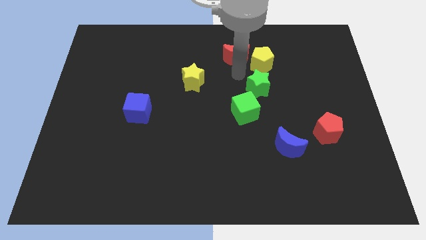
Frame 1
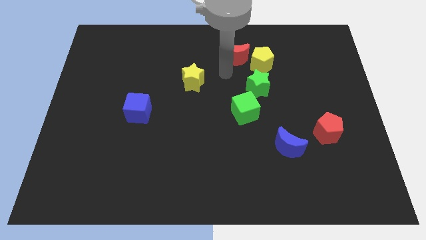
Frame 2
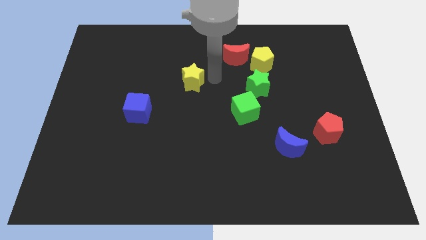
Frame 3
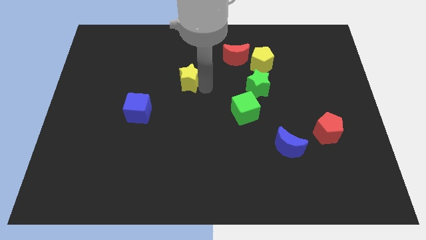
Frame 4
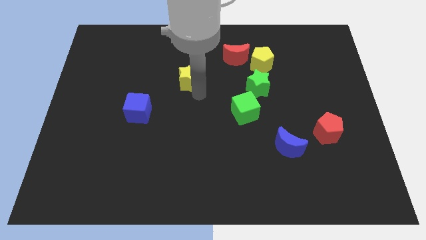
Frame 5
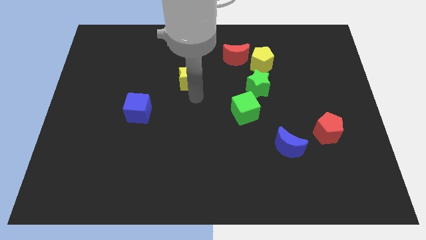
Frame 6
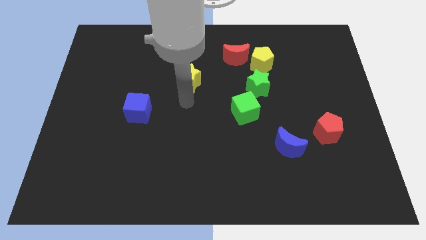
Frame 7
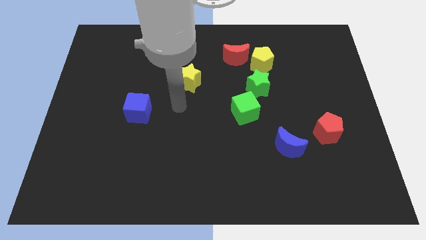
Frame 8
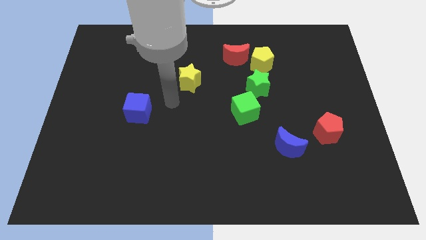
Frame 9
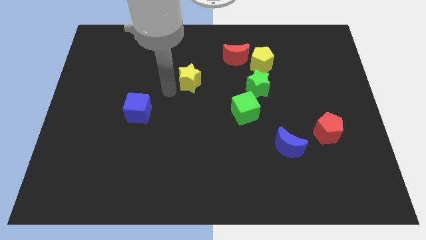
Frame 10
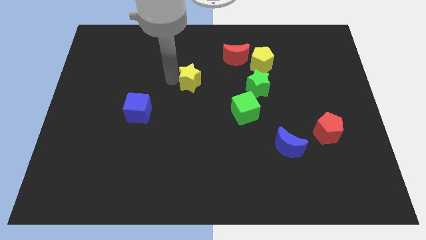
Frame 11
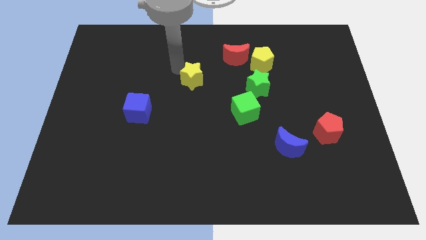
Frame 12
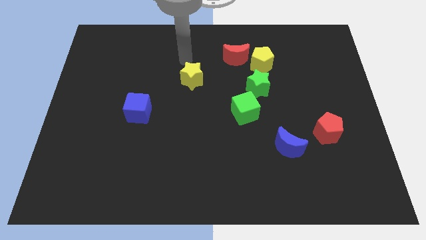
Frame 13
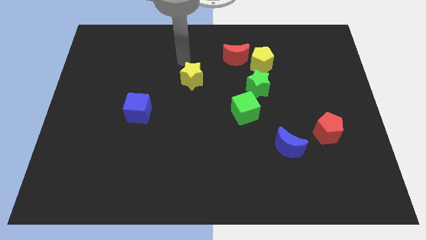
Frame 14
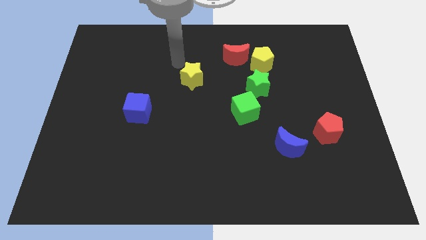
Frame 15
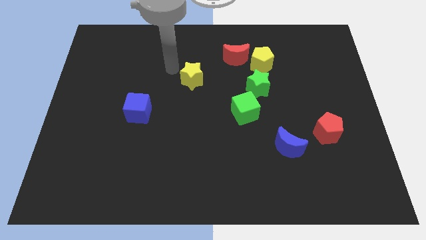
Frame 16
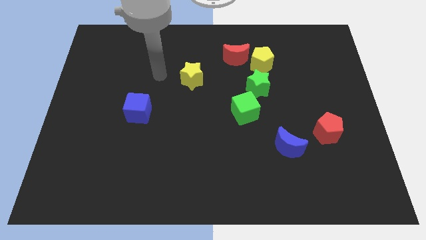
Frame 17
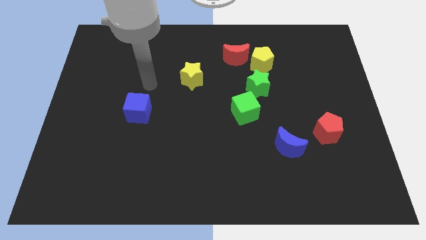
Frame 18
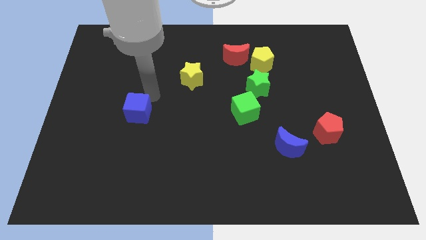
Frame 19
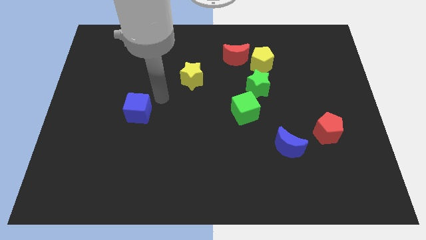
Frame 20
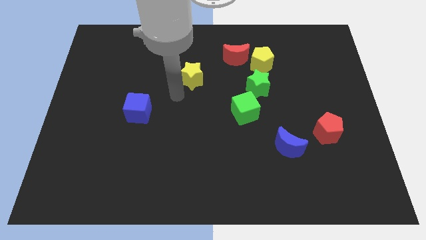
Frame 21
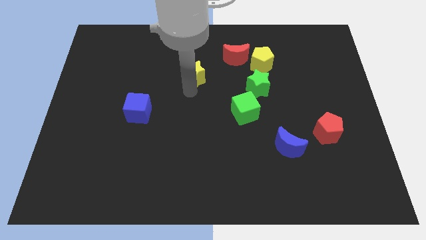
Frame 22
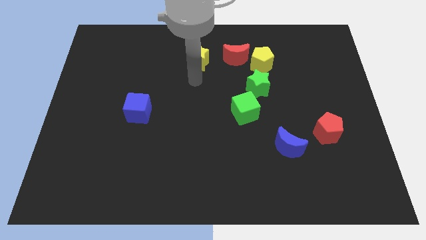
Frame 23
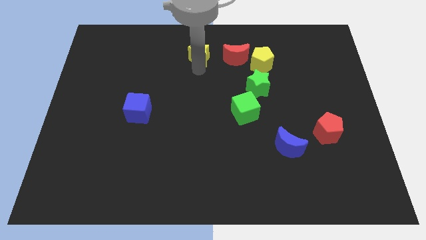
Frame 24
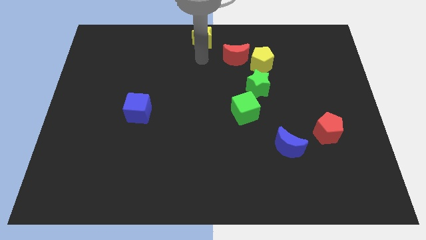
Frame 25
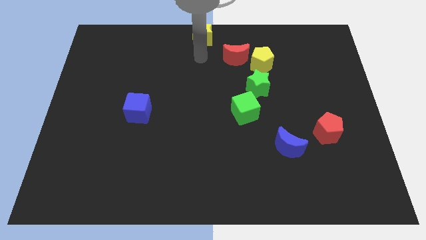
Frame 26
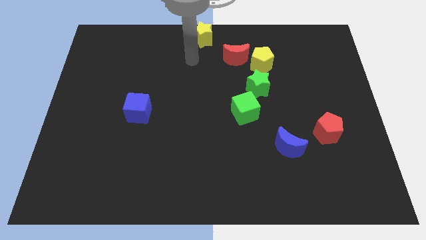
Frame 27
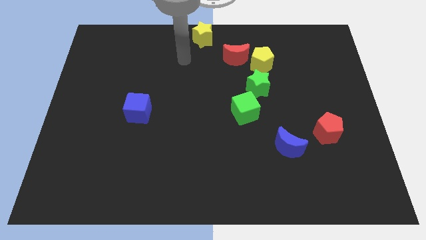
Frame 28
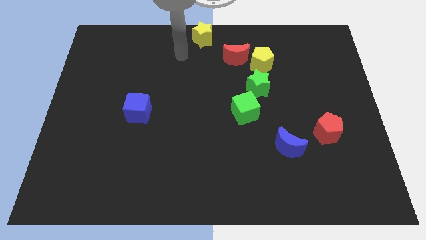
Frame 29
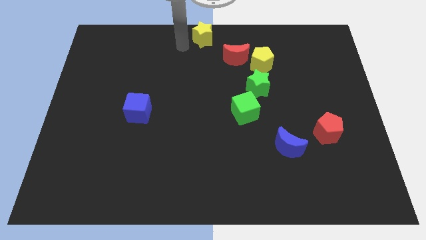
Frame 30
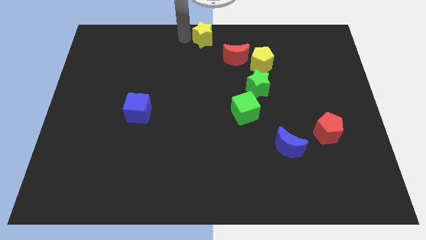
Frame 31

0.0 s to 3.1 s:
place the yellow star at top center of the board

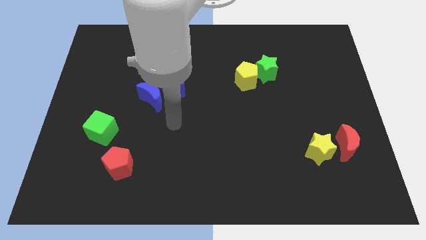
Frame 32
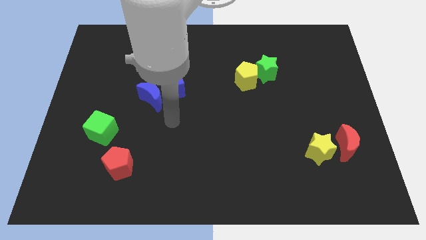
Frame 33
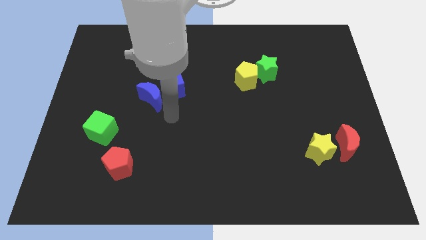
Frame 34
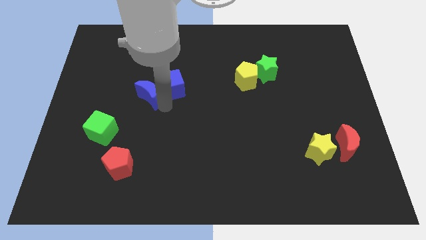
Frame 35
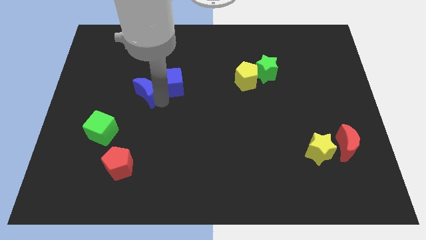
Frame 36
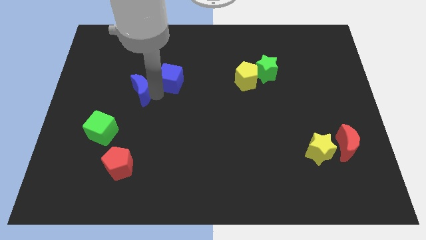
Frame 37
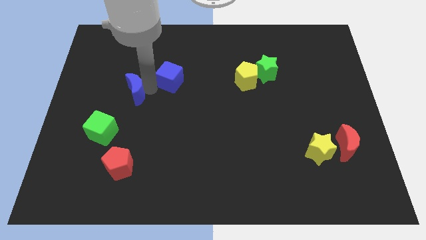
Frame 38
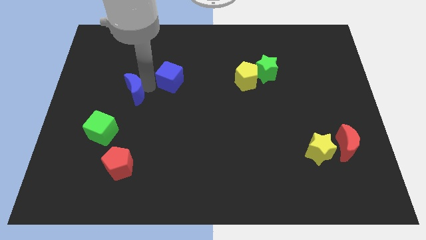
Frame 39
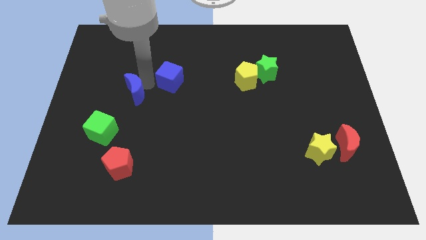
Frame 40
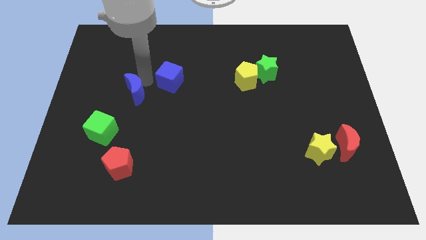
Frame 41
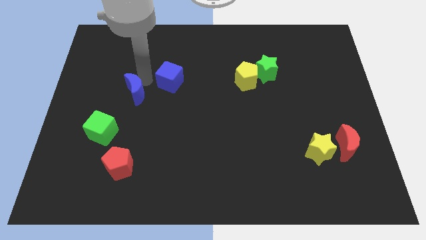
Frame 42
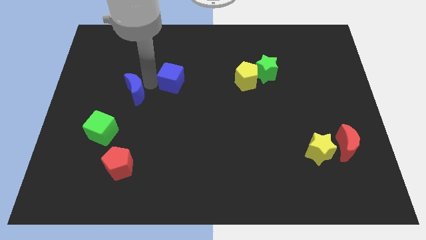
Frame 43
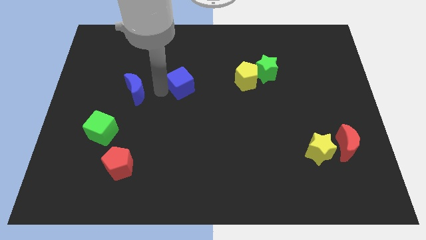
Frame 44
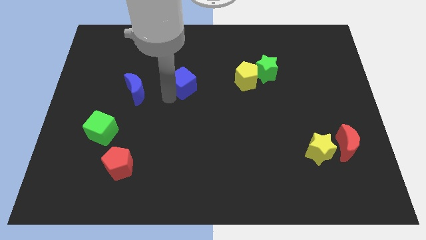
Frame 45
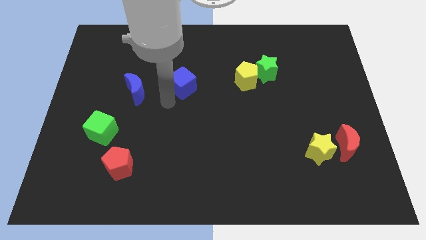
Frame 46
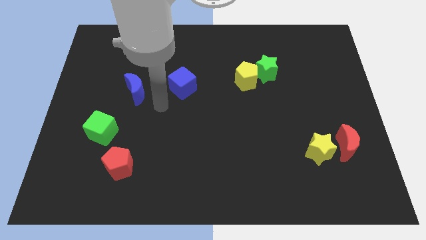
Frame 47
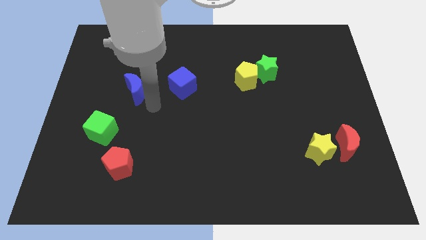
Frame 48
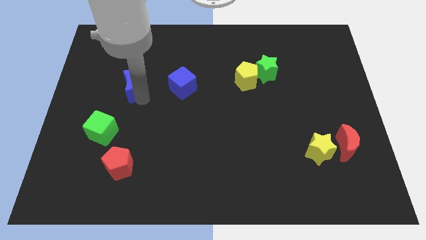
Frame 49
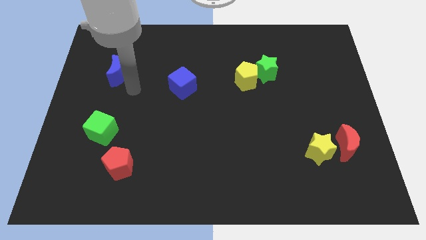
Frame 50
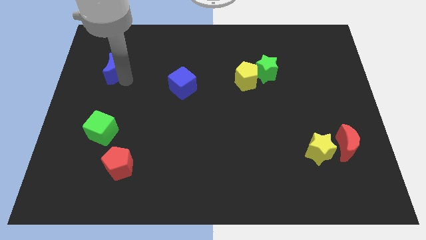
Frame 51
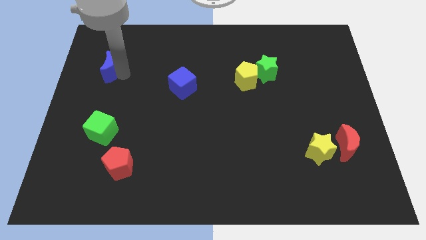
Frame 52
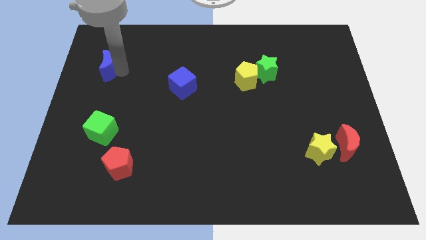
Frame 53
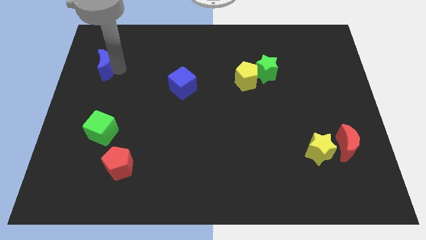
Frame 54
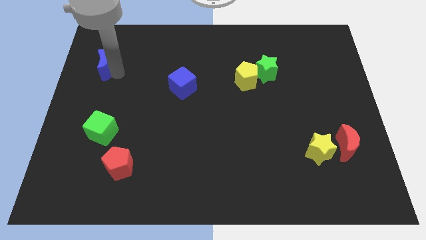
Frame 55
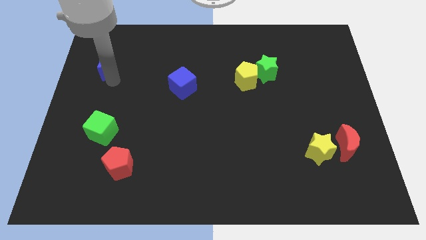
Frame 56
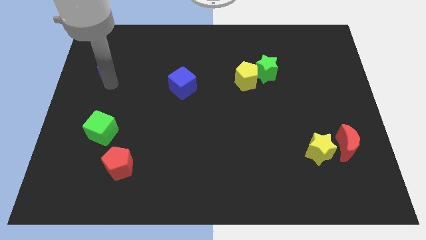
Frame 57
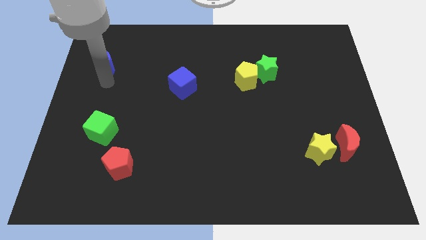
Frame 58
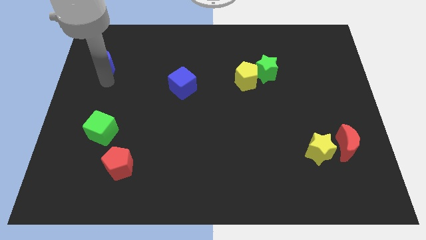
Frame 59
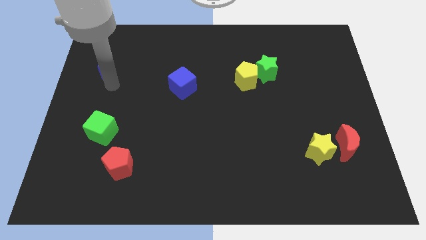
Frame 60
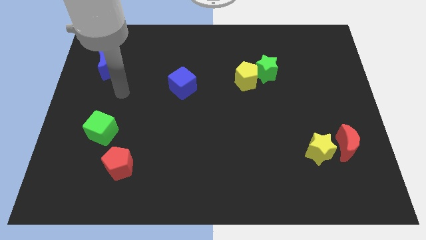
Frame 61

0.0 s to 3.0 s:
place the blue moon to the top of green cube

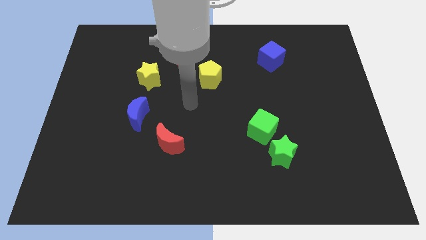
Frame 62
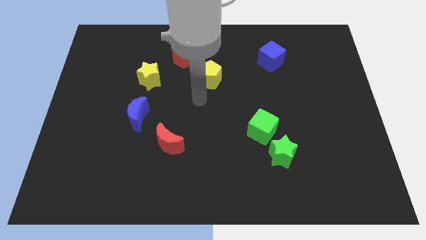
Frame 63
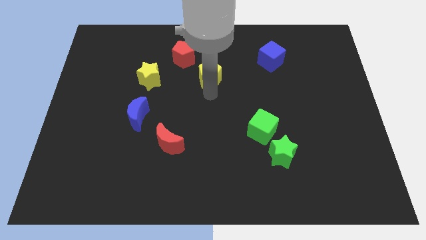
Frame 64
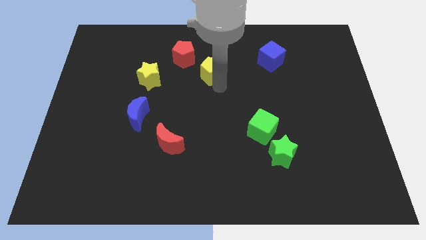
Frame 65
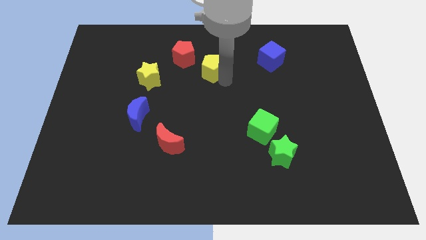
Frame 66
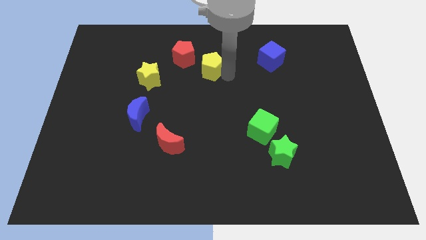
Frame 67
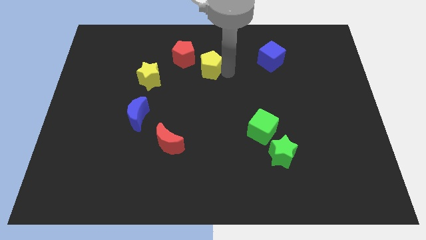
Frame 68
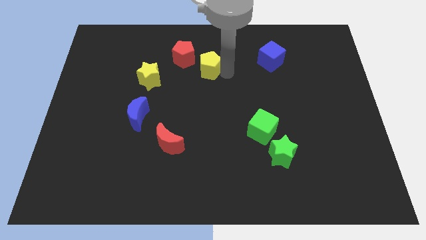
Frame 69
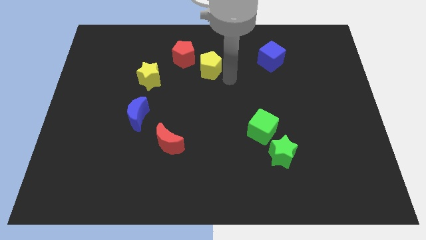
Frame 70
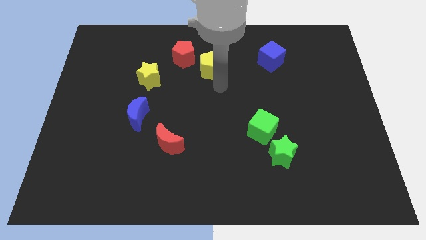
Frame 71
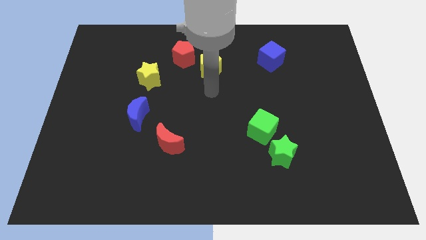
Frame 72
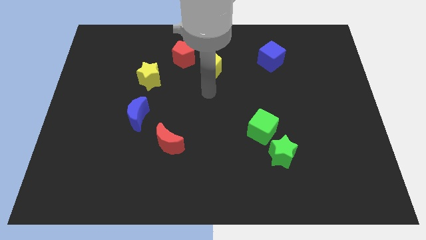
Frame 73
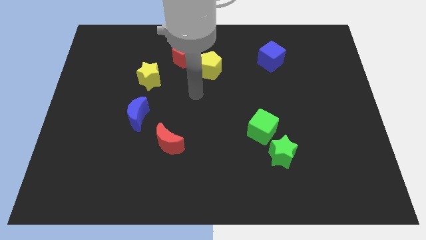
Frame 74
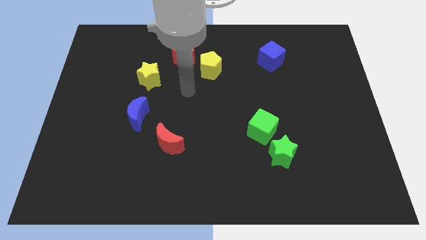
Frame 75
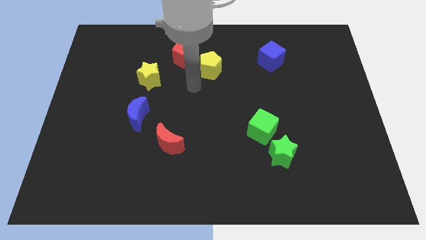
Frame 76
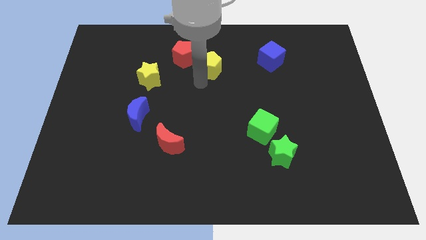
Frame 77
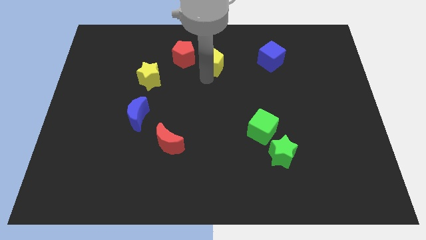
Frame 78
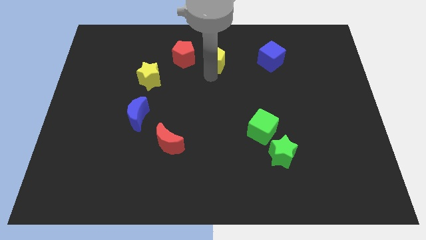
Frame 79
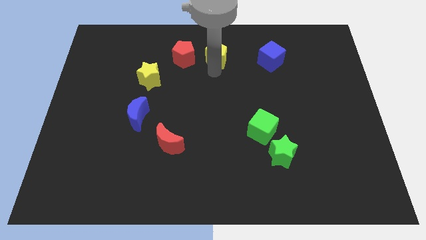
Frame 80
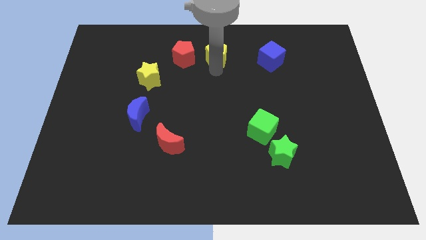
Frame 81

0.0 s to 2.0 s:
place the yellow pentagon right to the red pentagon

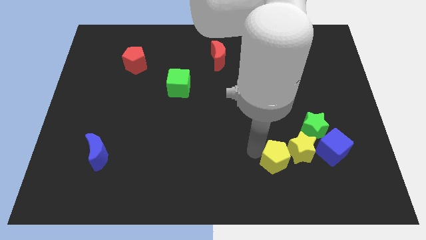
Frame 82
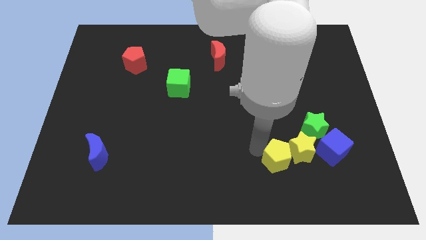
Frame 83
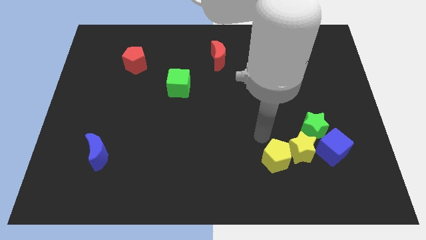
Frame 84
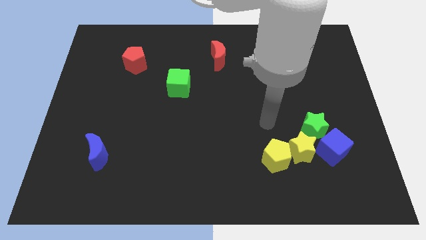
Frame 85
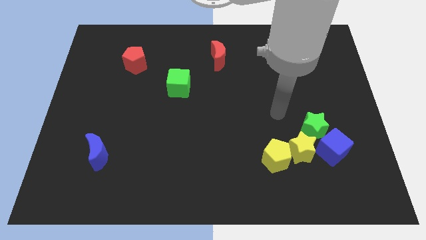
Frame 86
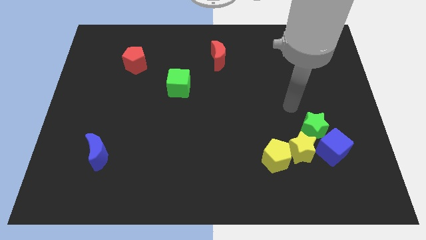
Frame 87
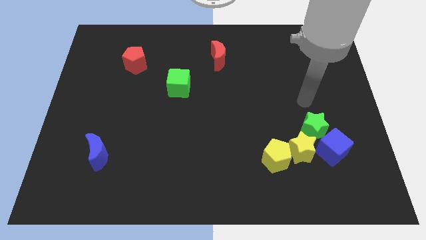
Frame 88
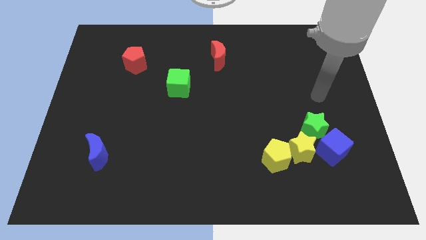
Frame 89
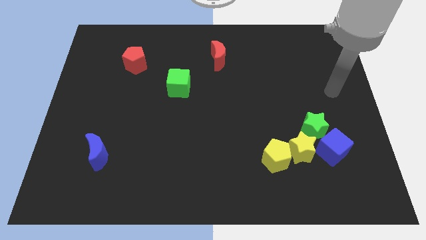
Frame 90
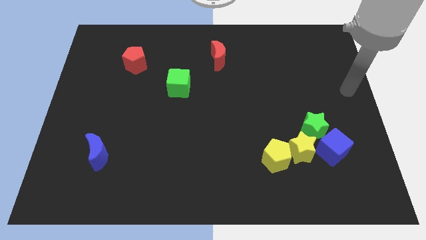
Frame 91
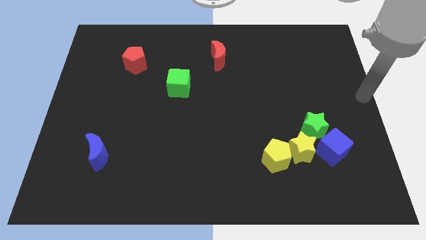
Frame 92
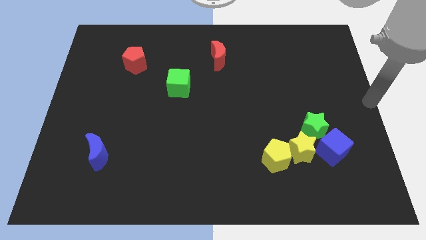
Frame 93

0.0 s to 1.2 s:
place your arm to the center right
